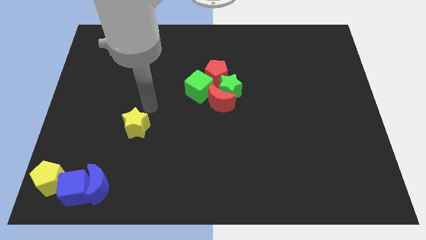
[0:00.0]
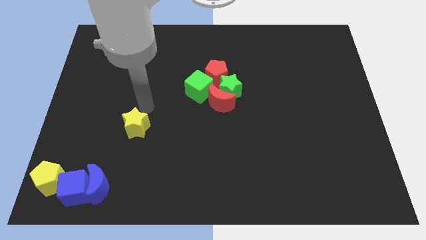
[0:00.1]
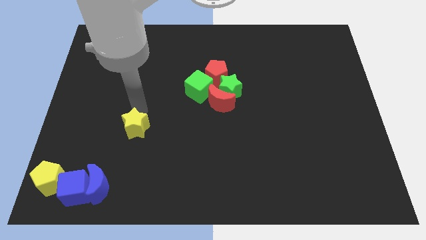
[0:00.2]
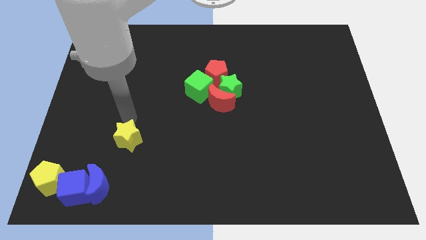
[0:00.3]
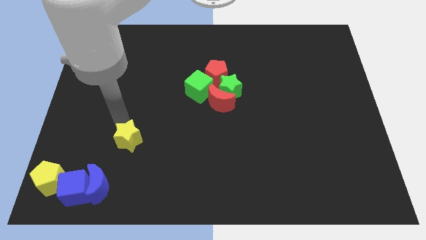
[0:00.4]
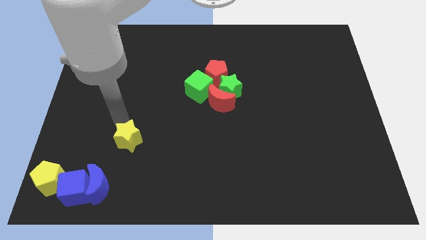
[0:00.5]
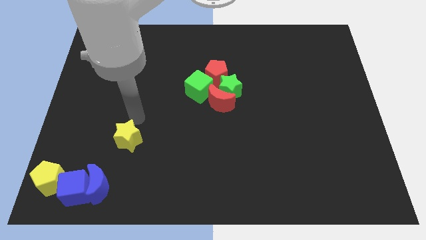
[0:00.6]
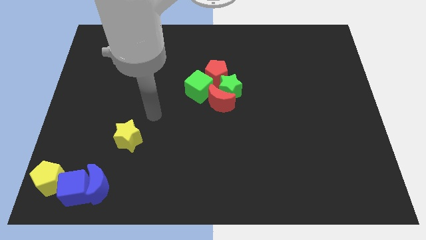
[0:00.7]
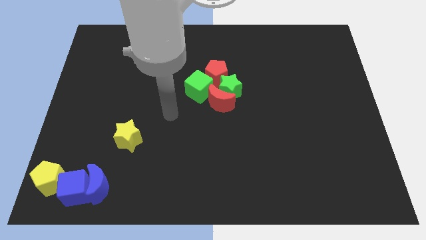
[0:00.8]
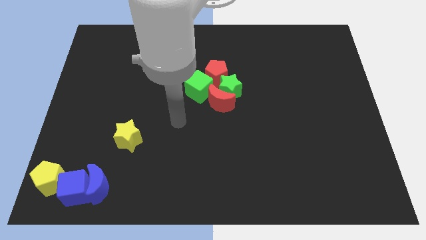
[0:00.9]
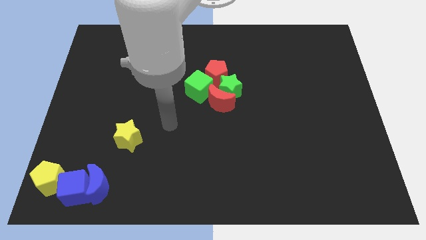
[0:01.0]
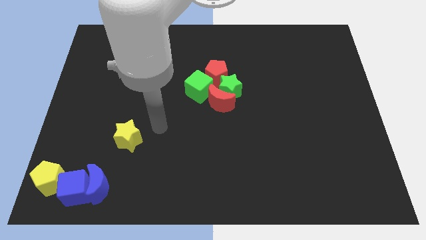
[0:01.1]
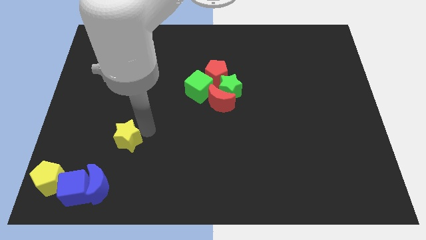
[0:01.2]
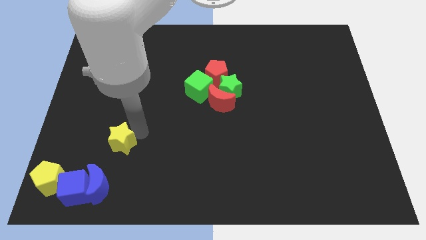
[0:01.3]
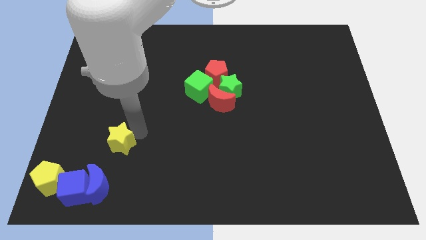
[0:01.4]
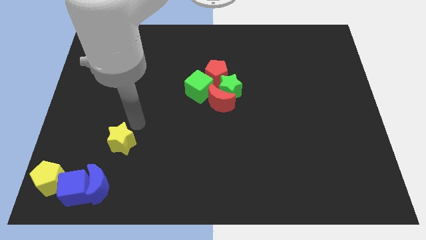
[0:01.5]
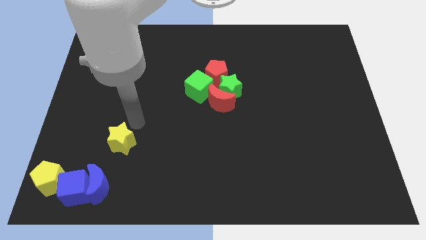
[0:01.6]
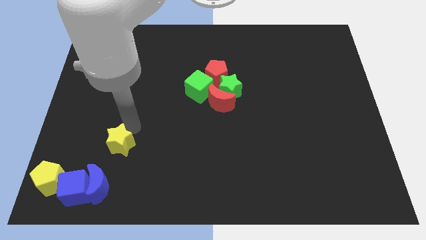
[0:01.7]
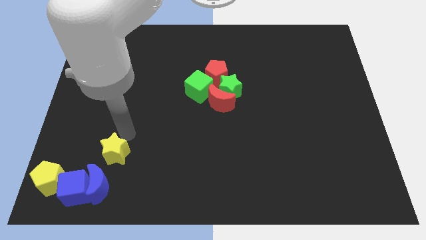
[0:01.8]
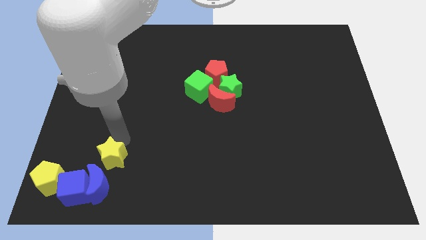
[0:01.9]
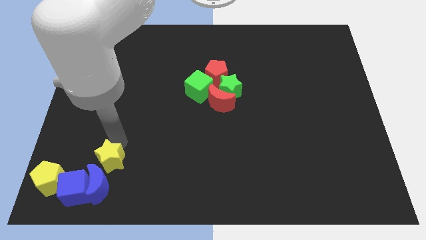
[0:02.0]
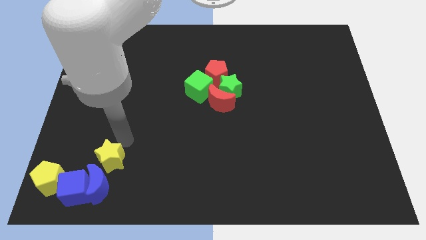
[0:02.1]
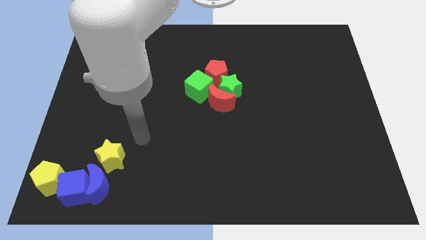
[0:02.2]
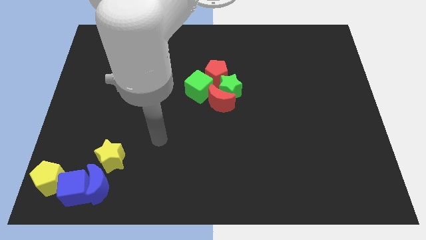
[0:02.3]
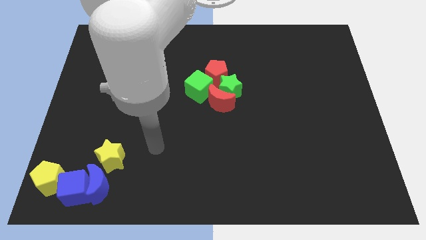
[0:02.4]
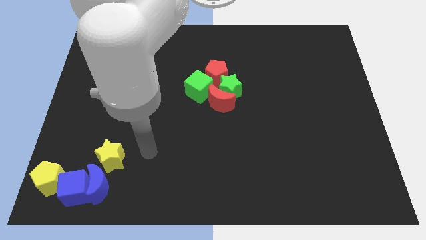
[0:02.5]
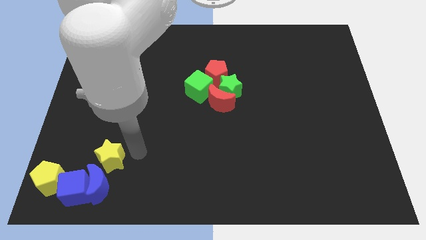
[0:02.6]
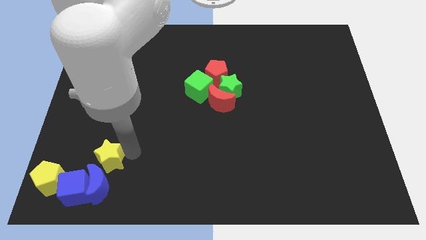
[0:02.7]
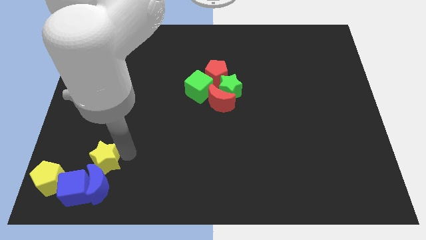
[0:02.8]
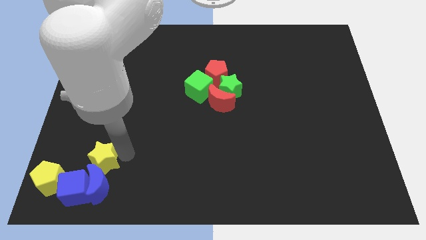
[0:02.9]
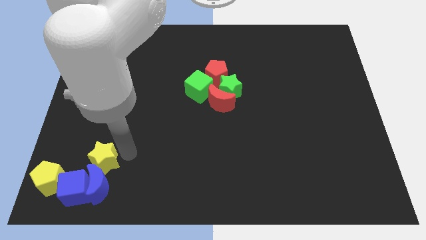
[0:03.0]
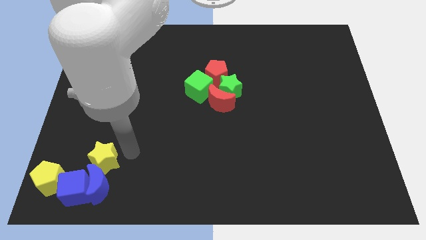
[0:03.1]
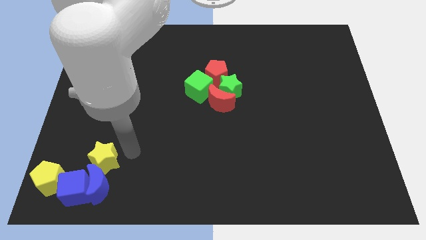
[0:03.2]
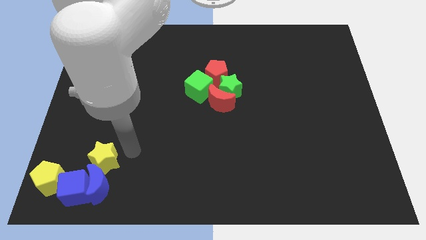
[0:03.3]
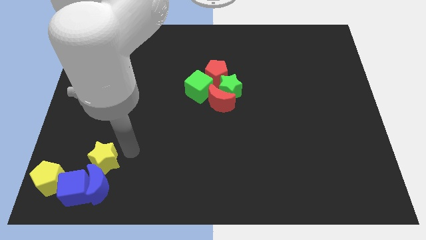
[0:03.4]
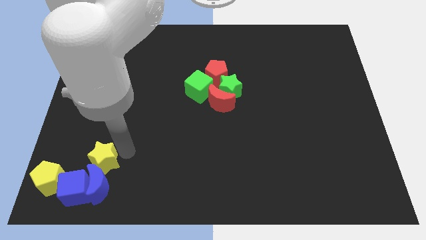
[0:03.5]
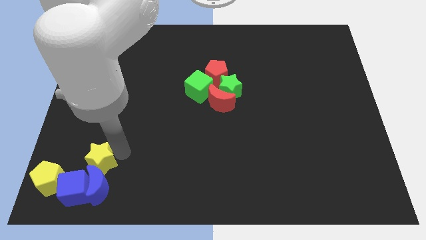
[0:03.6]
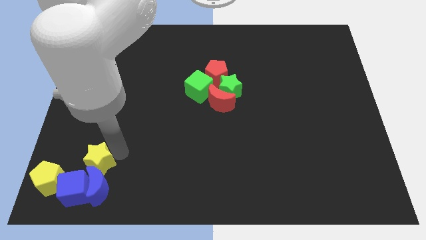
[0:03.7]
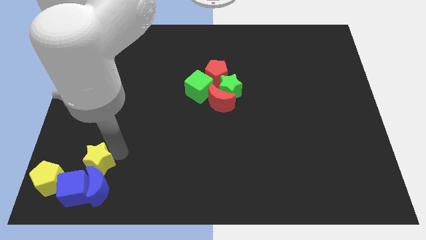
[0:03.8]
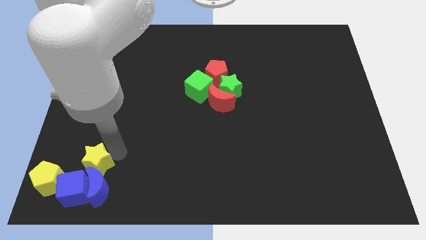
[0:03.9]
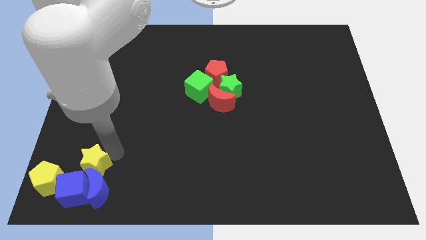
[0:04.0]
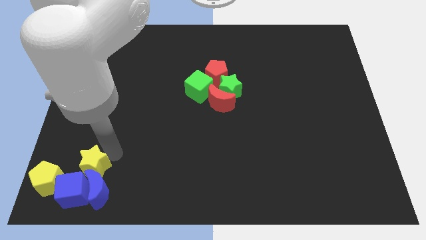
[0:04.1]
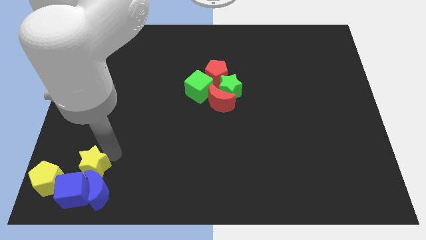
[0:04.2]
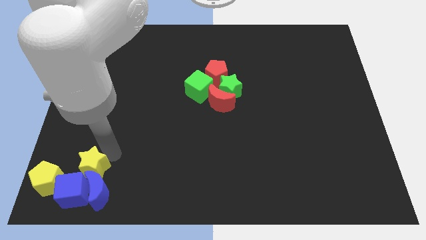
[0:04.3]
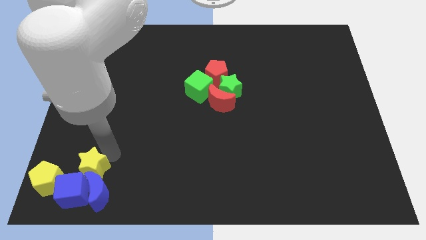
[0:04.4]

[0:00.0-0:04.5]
move the yellow star to the top of the blue crescent

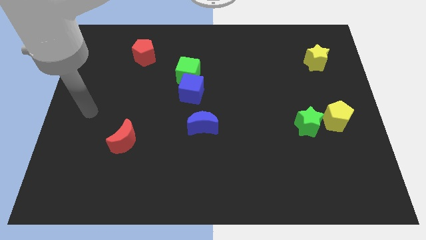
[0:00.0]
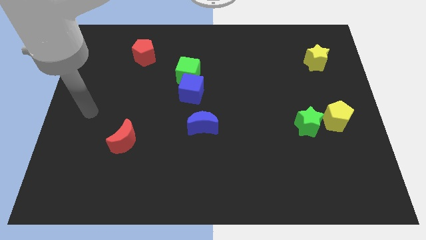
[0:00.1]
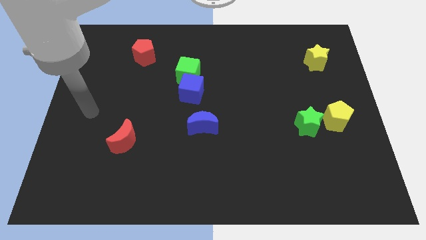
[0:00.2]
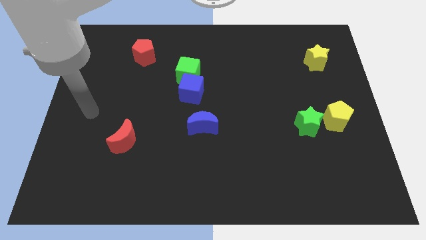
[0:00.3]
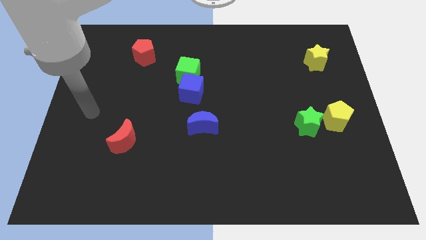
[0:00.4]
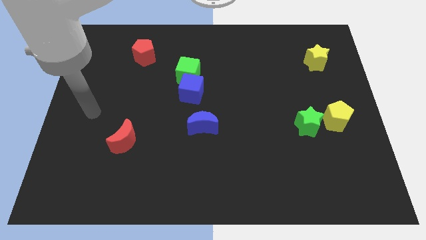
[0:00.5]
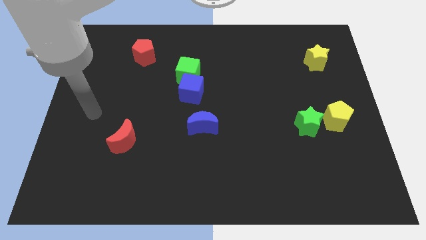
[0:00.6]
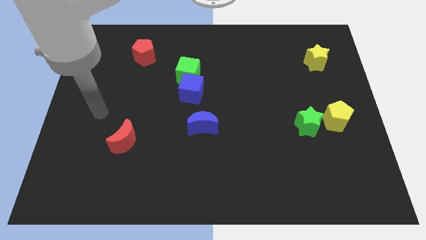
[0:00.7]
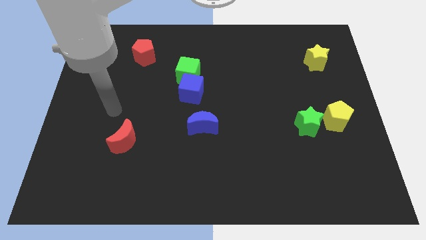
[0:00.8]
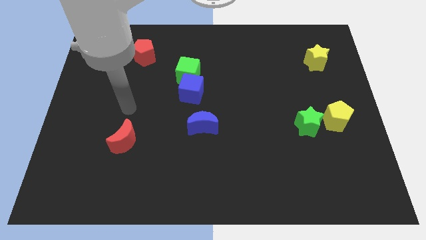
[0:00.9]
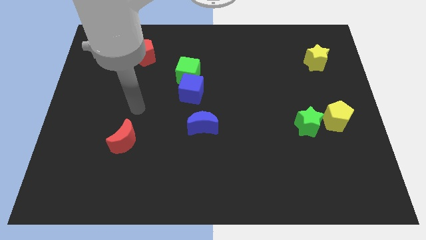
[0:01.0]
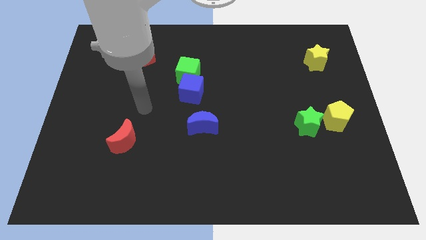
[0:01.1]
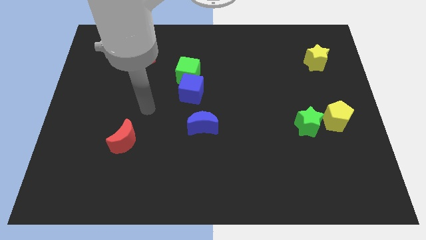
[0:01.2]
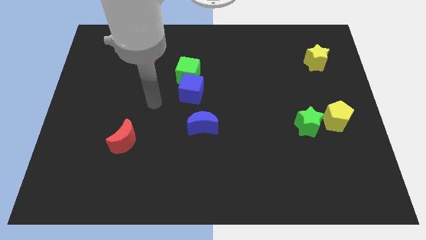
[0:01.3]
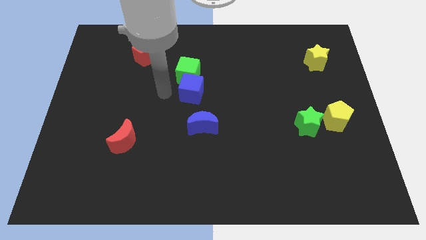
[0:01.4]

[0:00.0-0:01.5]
move the arm to the left of the blue cube

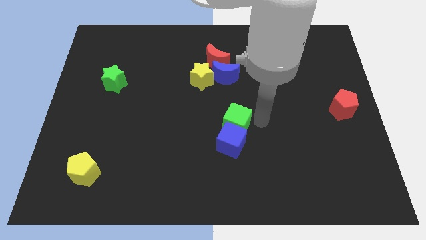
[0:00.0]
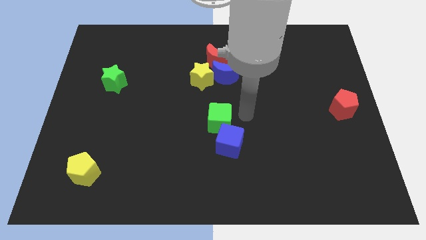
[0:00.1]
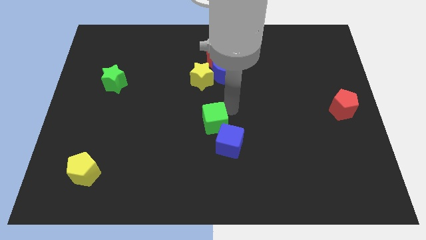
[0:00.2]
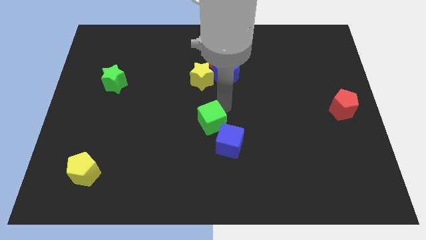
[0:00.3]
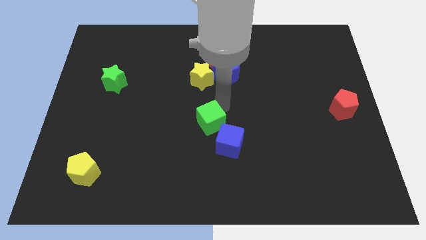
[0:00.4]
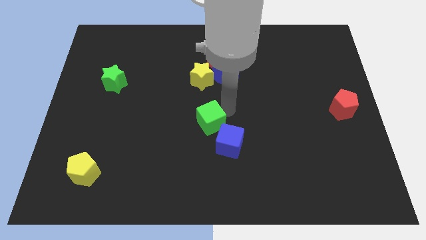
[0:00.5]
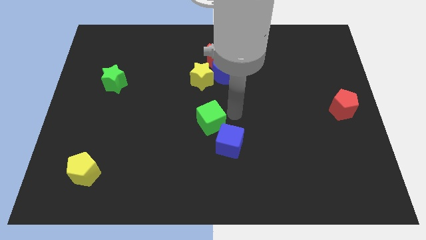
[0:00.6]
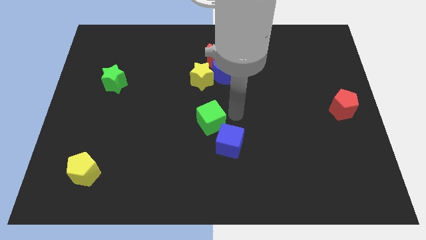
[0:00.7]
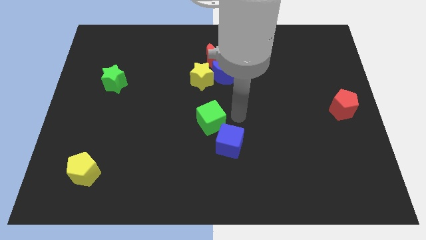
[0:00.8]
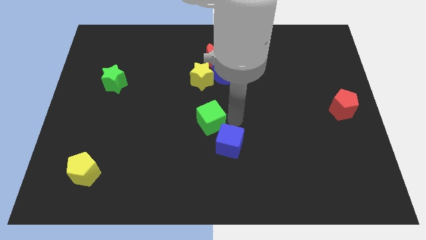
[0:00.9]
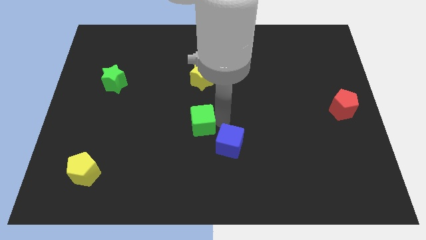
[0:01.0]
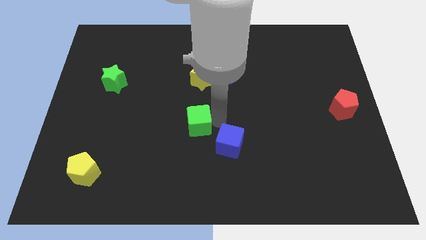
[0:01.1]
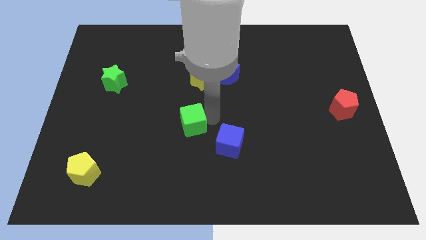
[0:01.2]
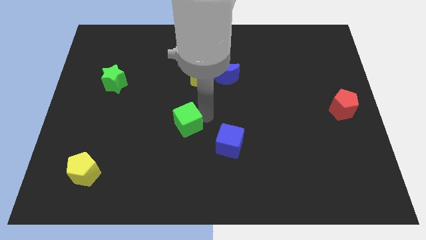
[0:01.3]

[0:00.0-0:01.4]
separate the green cube from the blue cube

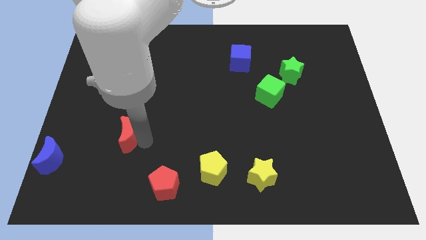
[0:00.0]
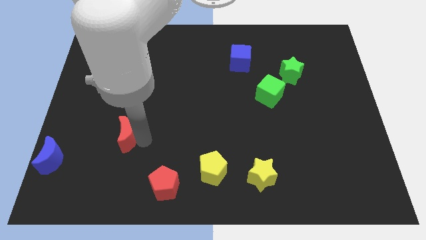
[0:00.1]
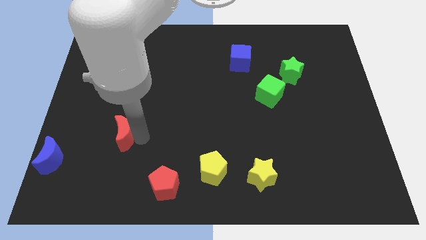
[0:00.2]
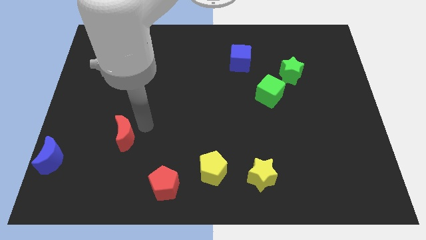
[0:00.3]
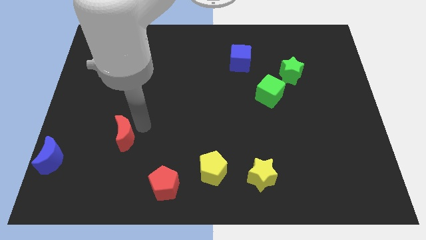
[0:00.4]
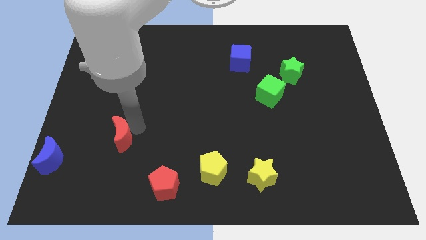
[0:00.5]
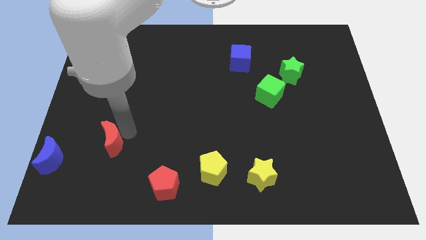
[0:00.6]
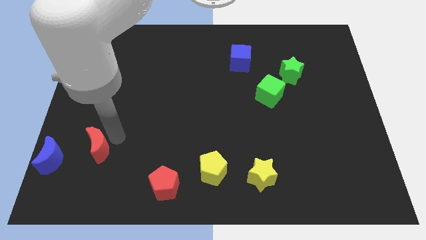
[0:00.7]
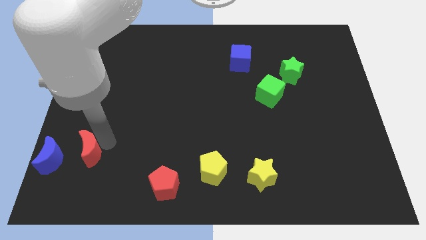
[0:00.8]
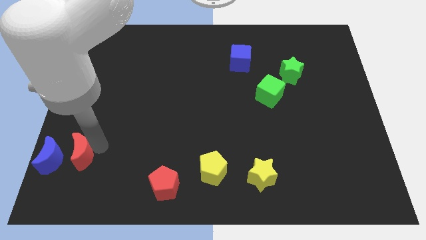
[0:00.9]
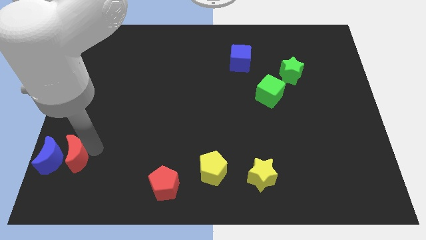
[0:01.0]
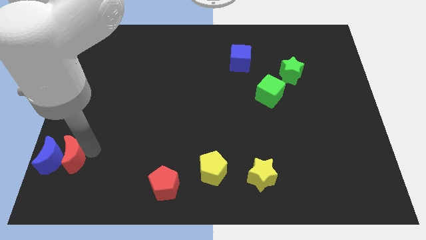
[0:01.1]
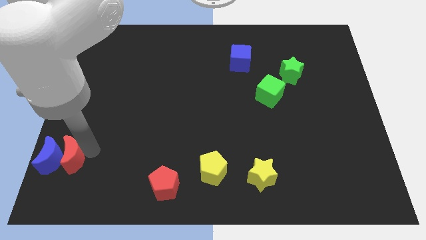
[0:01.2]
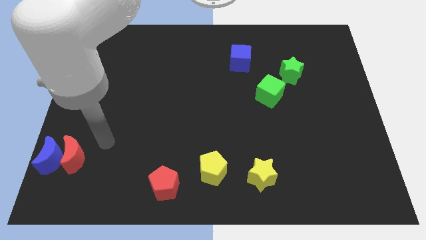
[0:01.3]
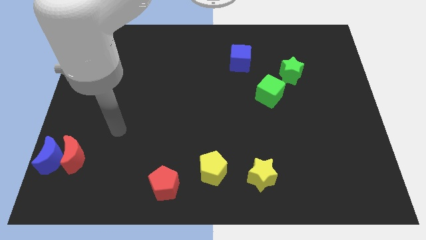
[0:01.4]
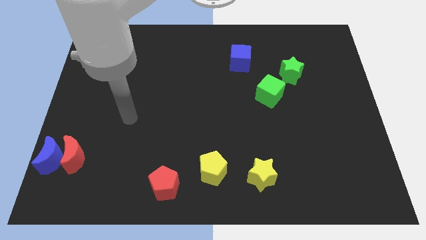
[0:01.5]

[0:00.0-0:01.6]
place the red moon right to the blue moon
